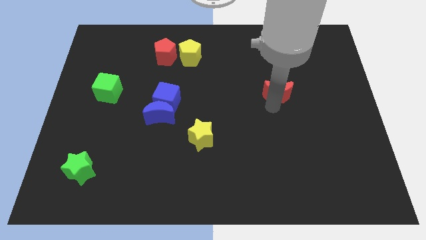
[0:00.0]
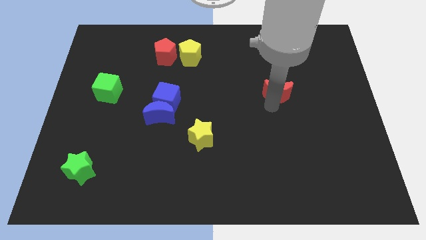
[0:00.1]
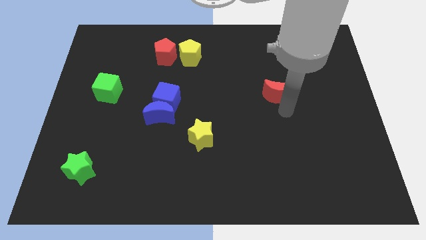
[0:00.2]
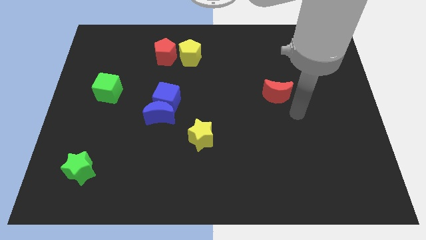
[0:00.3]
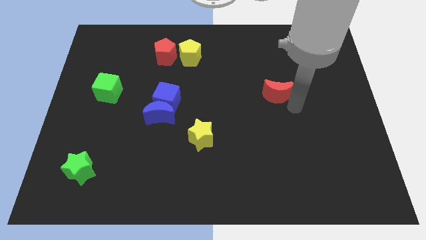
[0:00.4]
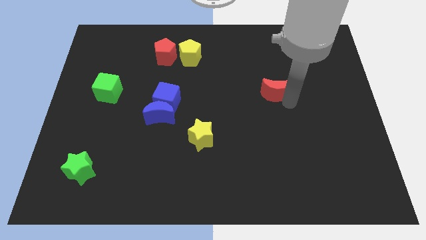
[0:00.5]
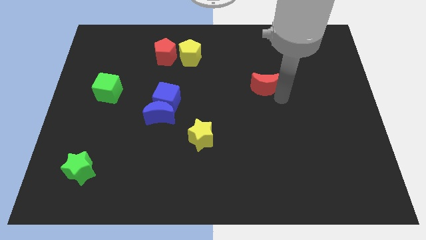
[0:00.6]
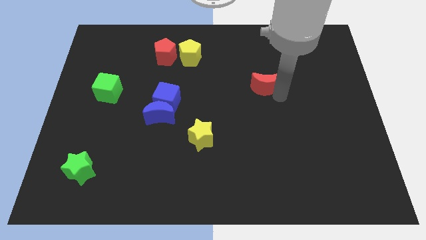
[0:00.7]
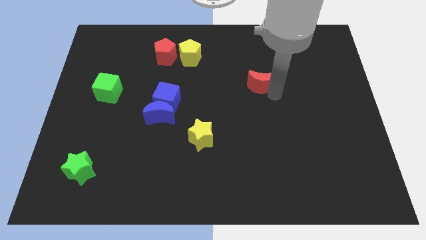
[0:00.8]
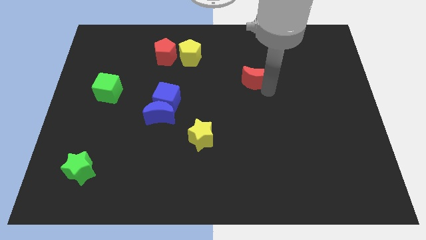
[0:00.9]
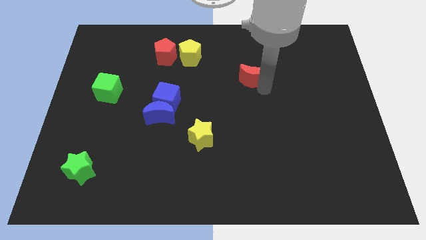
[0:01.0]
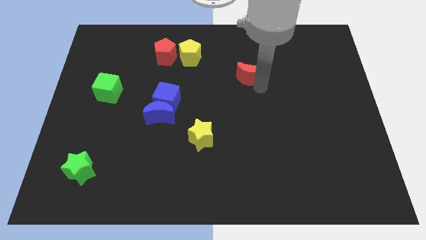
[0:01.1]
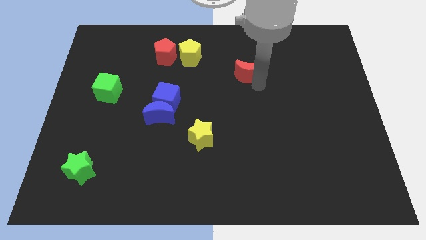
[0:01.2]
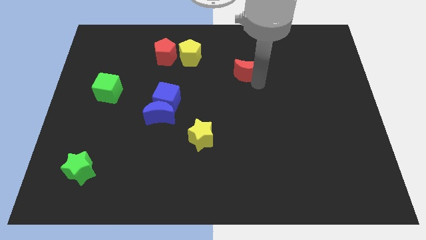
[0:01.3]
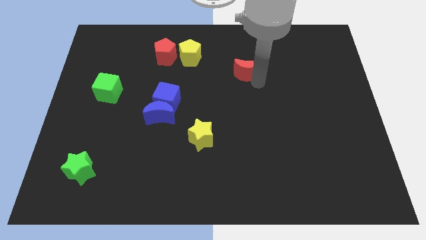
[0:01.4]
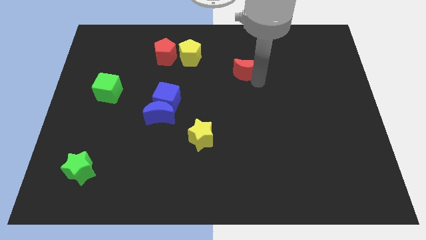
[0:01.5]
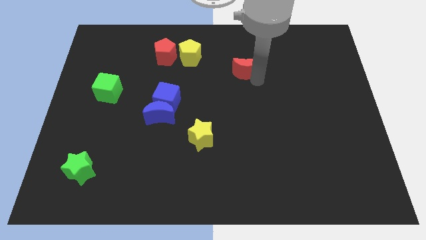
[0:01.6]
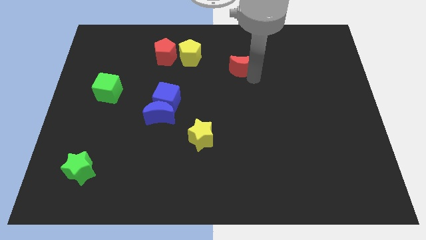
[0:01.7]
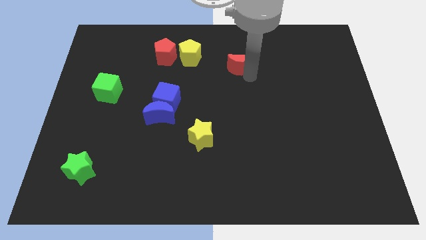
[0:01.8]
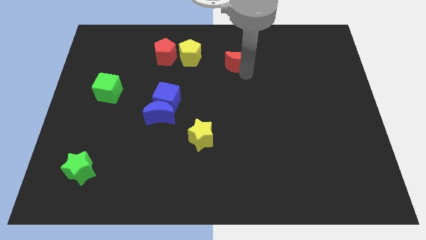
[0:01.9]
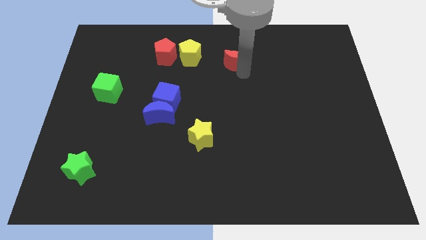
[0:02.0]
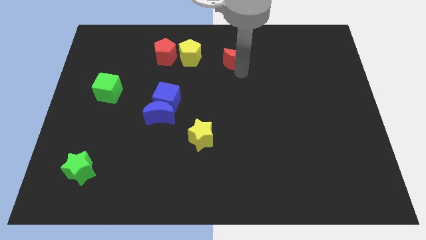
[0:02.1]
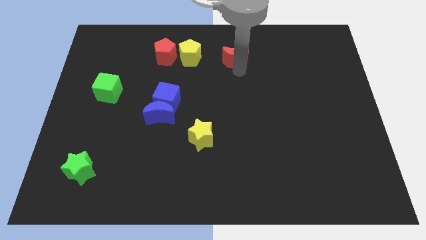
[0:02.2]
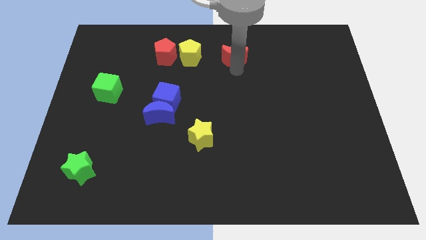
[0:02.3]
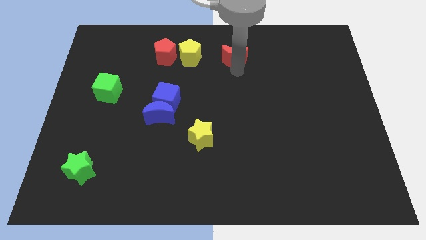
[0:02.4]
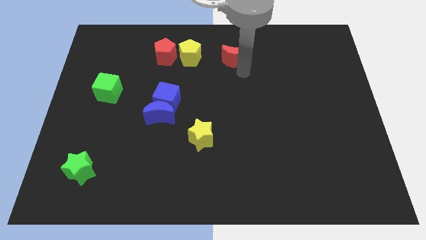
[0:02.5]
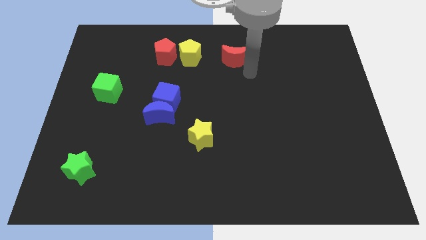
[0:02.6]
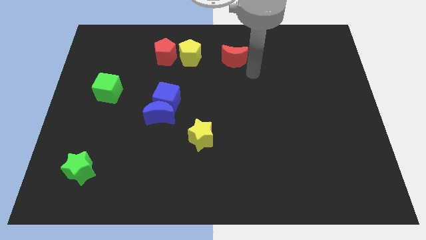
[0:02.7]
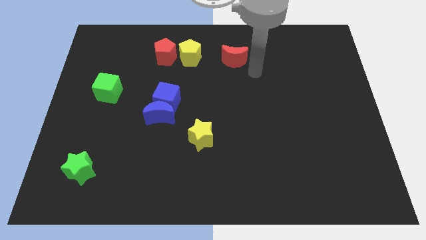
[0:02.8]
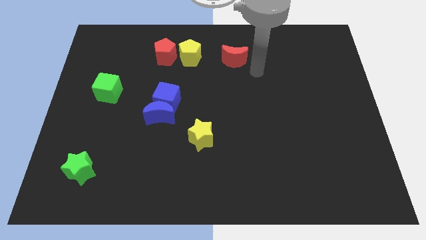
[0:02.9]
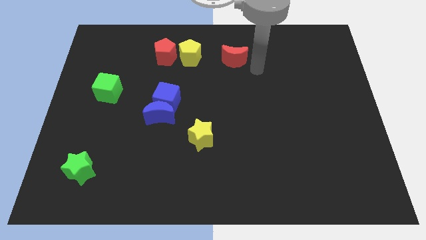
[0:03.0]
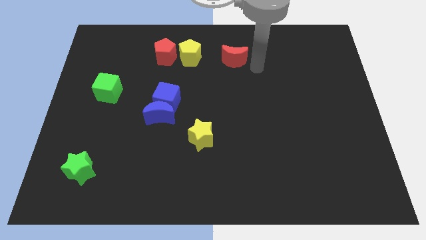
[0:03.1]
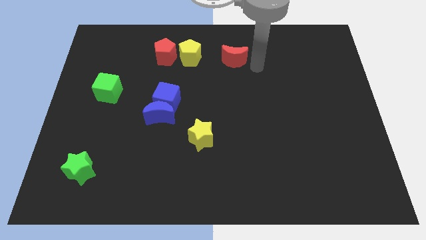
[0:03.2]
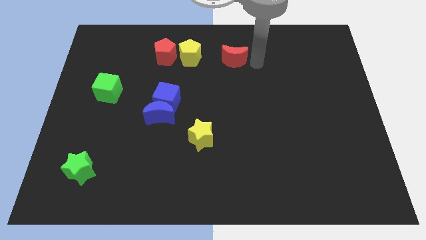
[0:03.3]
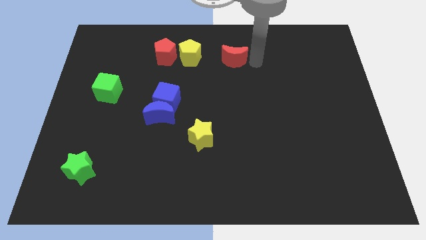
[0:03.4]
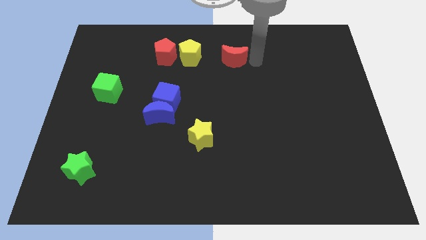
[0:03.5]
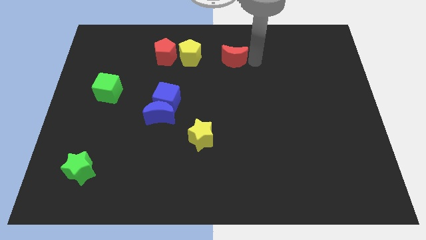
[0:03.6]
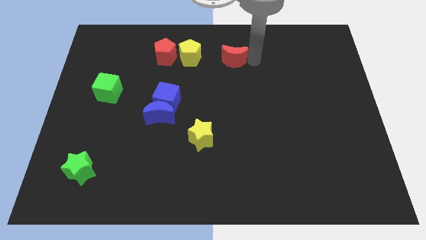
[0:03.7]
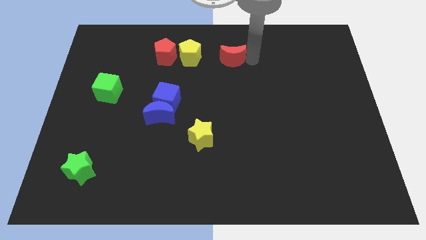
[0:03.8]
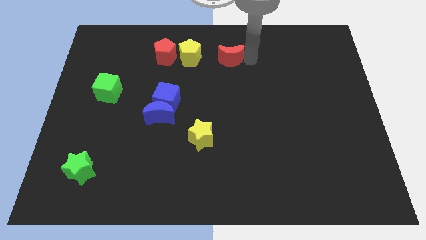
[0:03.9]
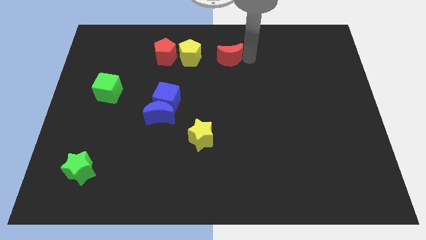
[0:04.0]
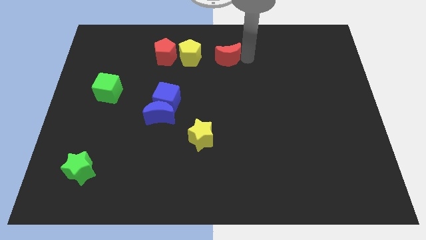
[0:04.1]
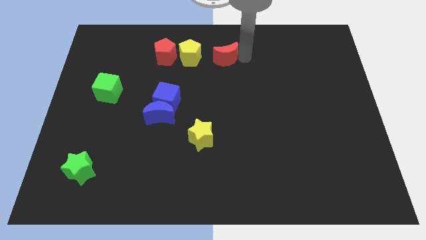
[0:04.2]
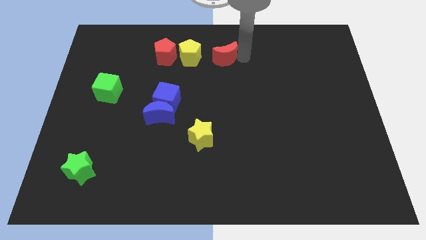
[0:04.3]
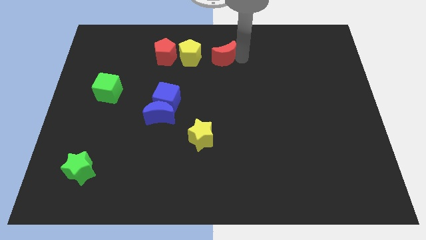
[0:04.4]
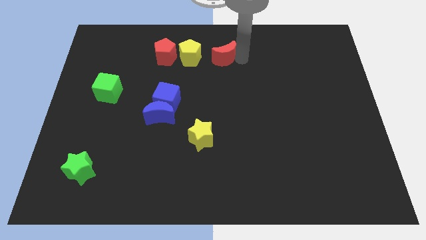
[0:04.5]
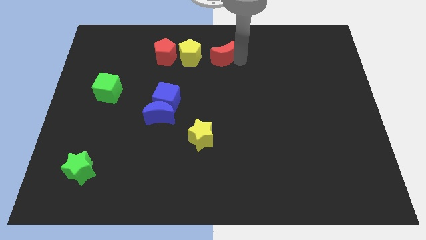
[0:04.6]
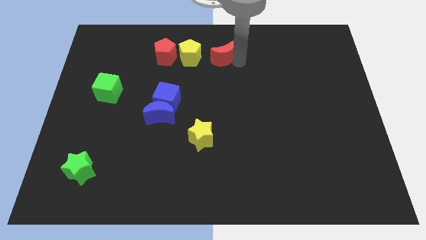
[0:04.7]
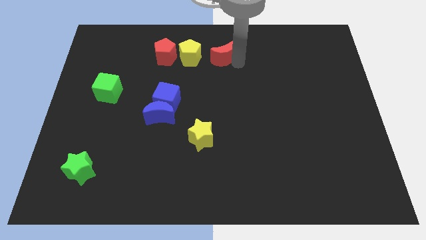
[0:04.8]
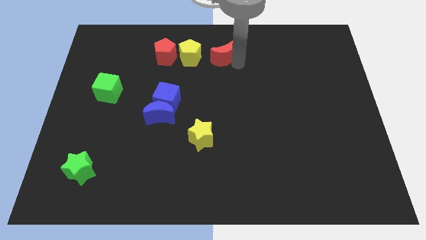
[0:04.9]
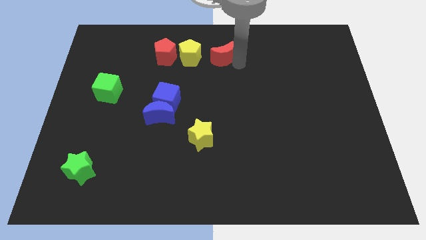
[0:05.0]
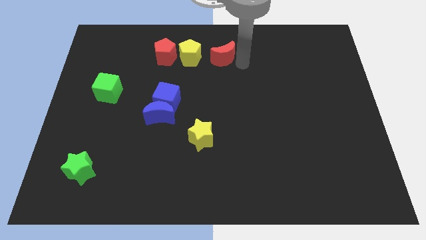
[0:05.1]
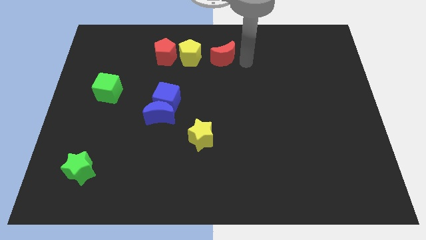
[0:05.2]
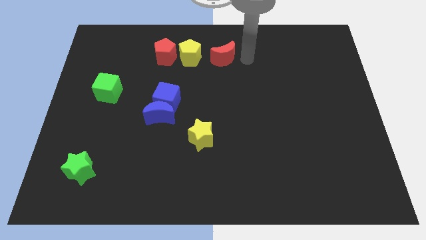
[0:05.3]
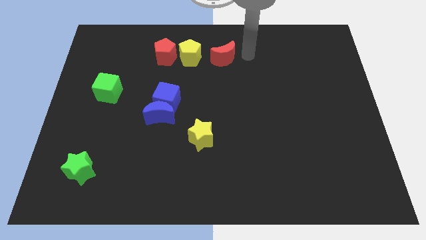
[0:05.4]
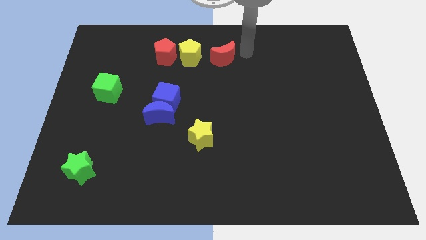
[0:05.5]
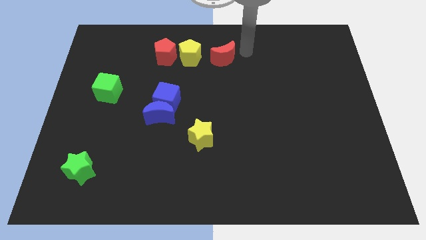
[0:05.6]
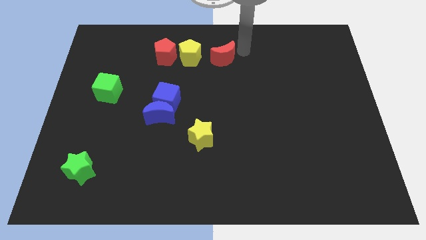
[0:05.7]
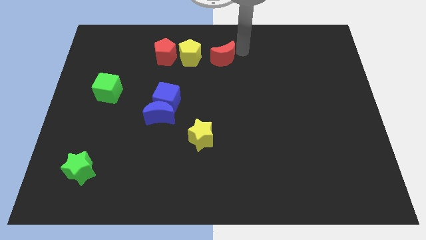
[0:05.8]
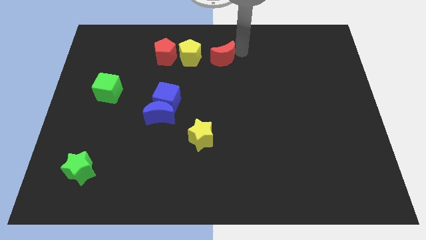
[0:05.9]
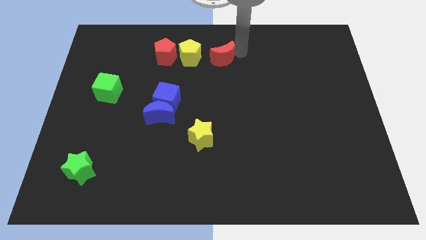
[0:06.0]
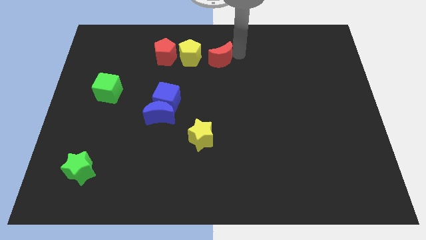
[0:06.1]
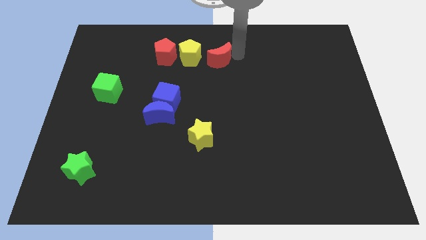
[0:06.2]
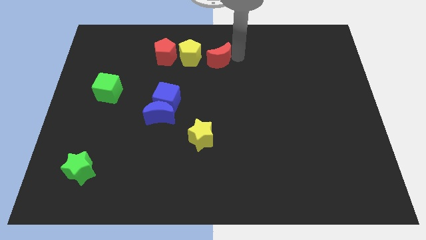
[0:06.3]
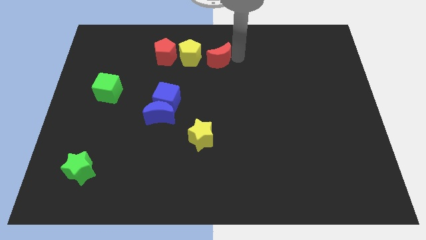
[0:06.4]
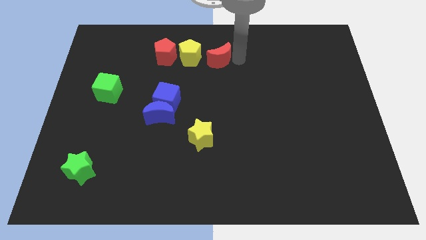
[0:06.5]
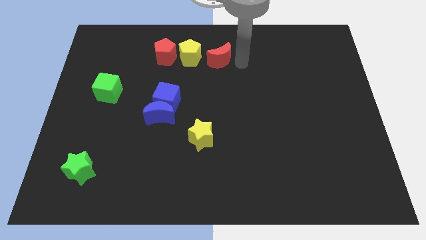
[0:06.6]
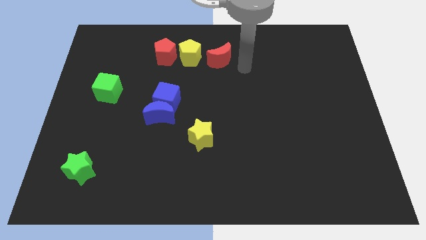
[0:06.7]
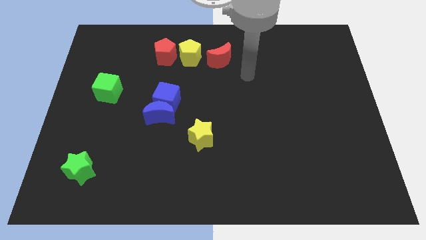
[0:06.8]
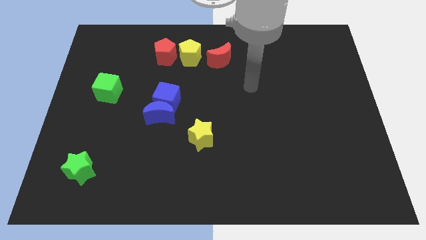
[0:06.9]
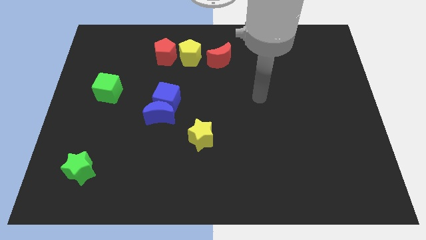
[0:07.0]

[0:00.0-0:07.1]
move the red crescent to the right side of the yellow pentagon

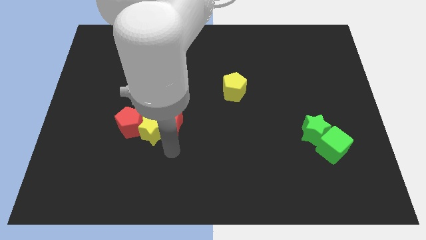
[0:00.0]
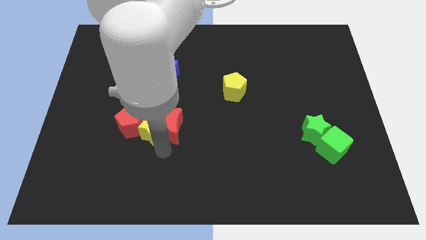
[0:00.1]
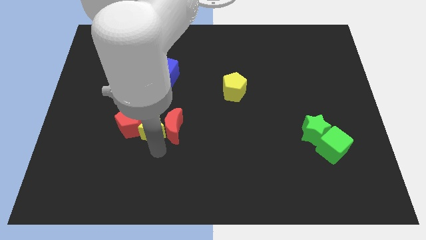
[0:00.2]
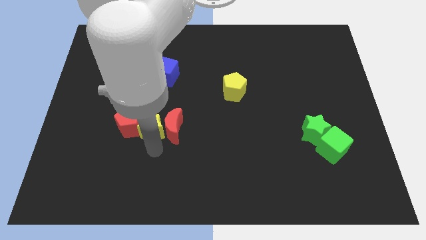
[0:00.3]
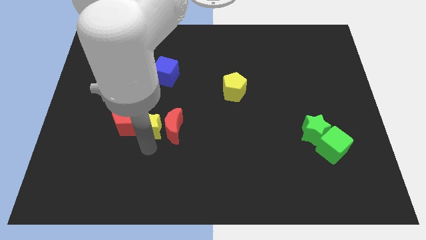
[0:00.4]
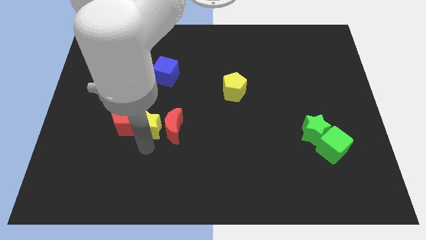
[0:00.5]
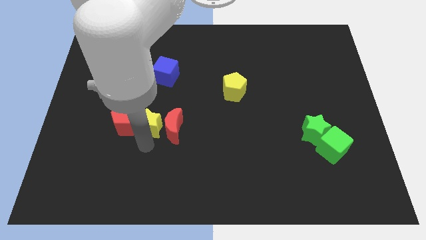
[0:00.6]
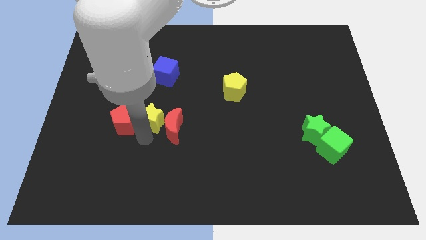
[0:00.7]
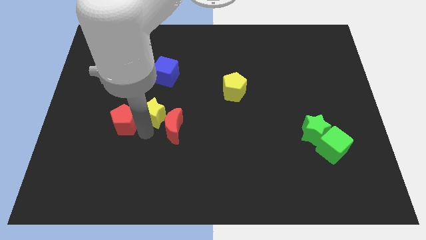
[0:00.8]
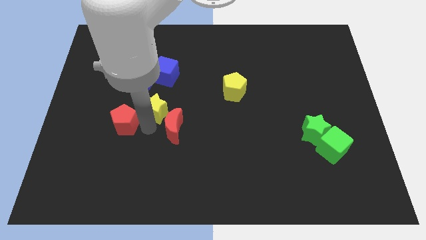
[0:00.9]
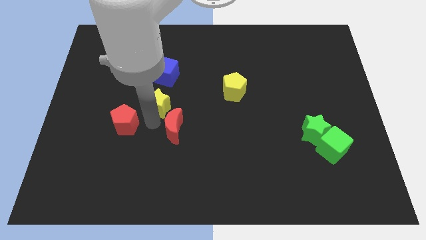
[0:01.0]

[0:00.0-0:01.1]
separate the yellow star from the red pentagon and red moon

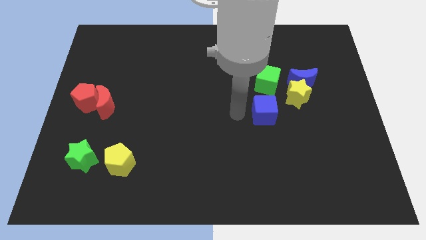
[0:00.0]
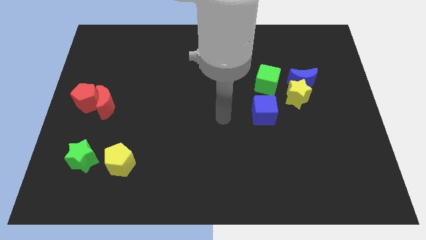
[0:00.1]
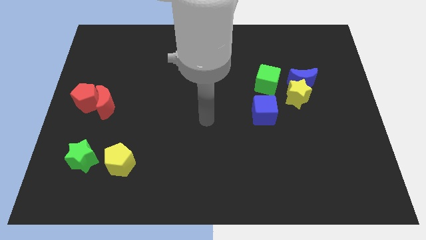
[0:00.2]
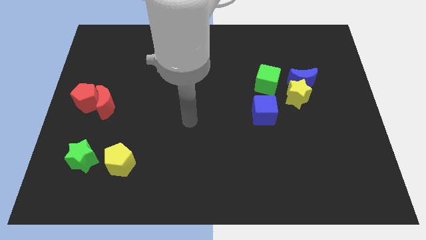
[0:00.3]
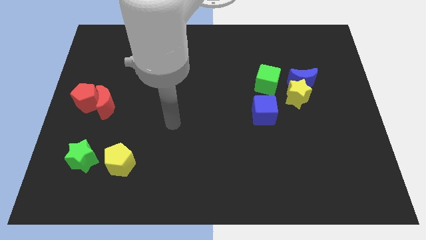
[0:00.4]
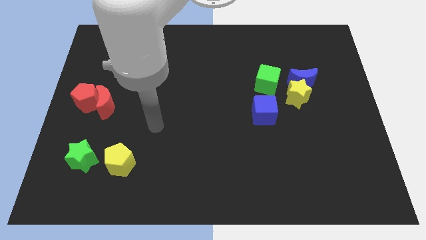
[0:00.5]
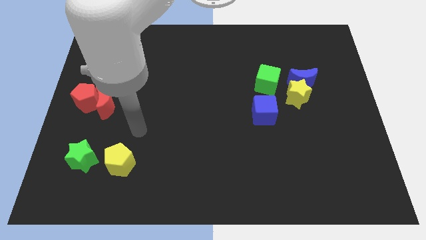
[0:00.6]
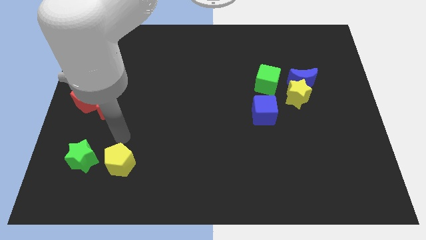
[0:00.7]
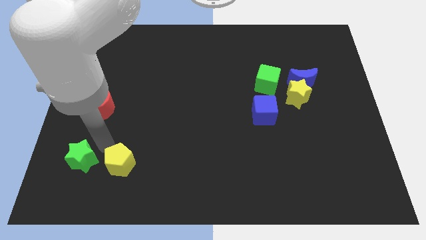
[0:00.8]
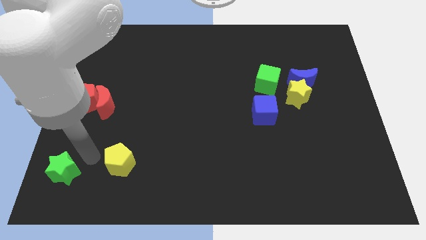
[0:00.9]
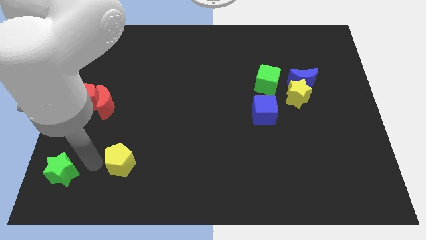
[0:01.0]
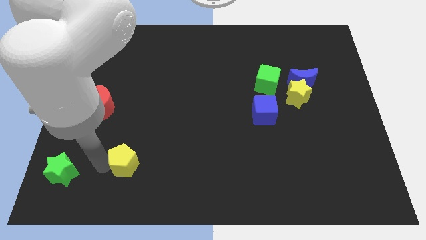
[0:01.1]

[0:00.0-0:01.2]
move the green star slightly to the left
